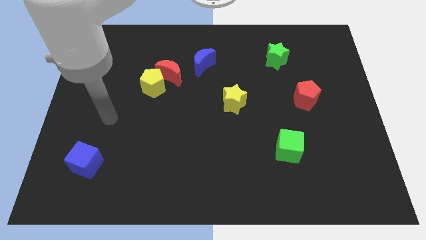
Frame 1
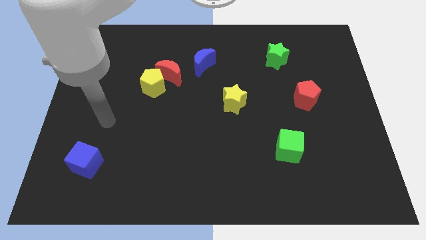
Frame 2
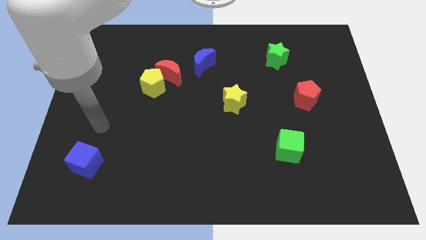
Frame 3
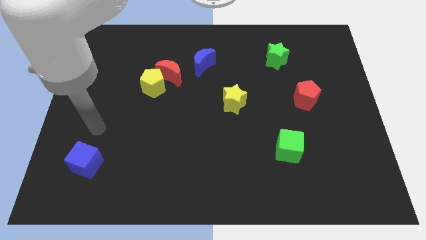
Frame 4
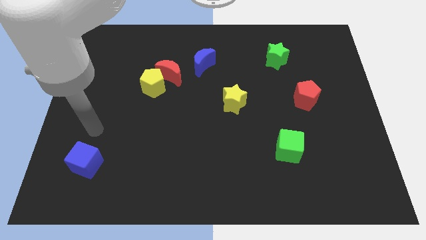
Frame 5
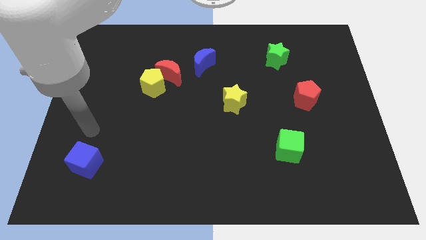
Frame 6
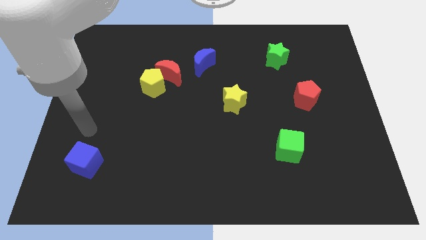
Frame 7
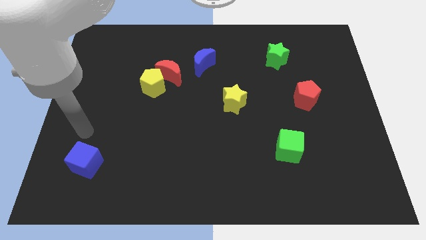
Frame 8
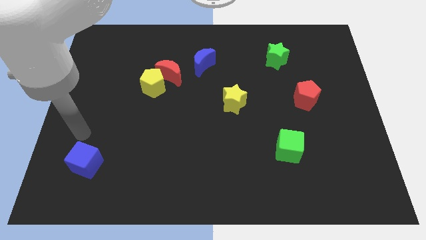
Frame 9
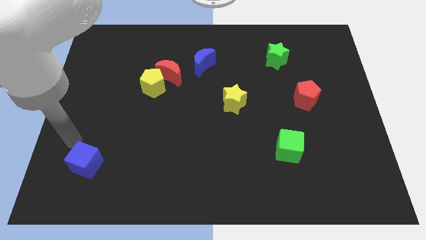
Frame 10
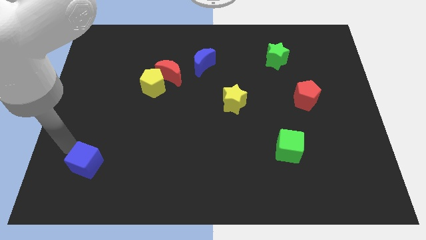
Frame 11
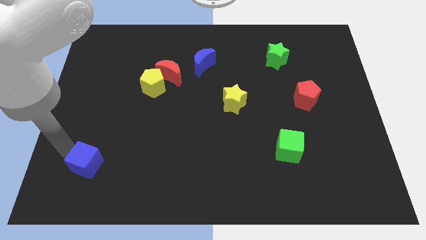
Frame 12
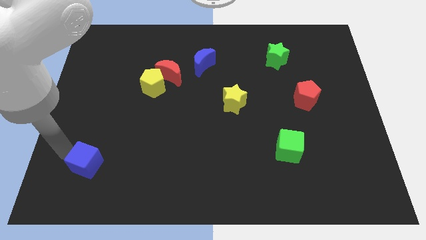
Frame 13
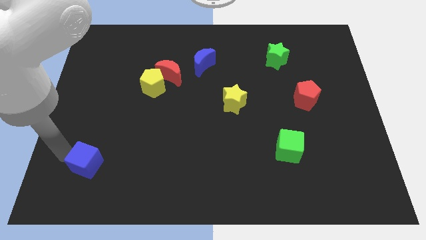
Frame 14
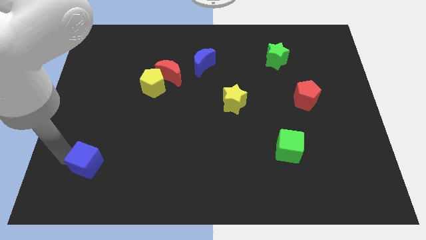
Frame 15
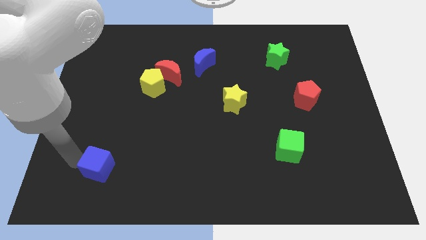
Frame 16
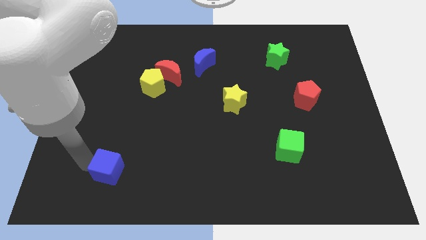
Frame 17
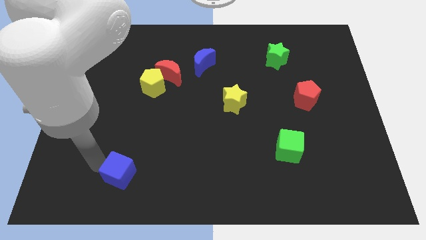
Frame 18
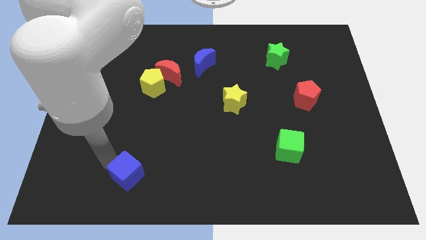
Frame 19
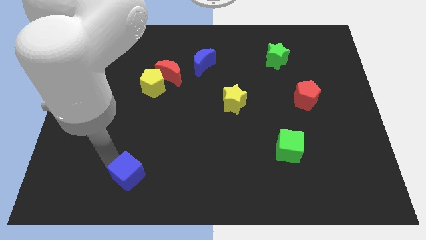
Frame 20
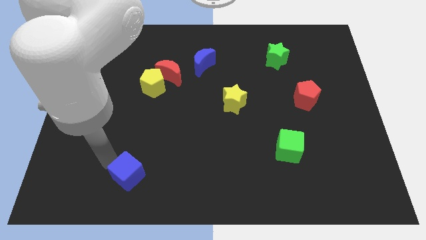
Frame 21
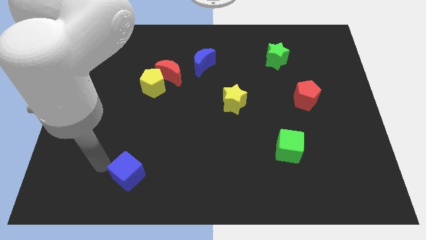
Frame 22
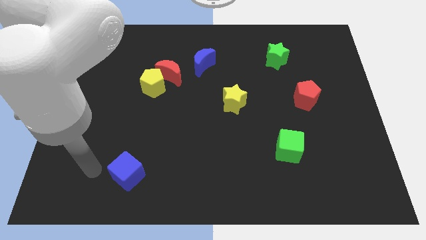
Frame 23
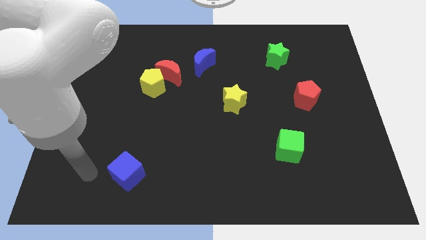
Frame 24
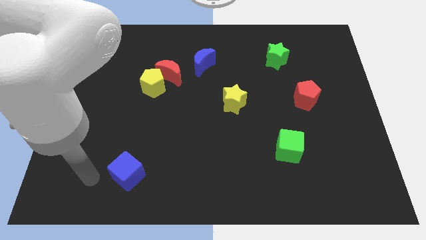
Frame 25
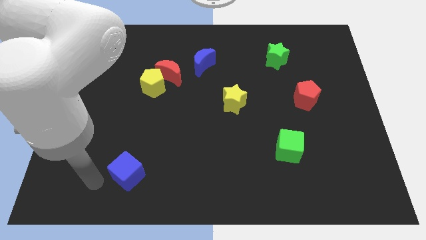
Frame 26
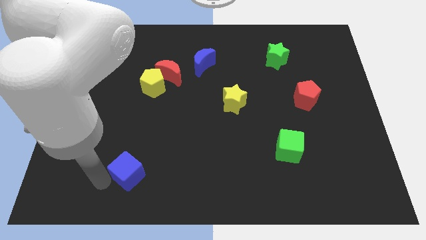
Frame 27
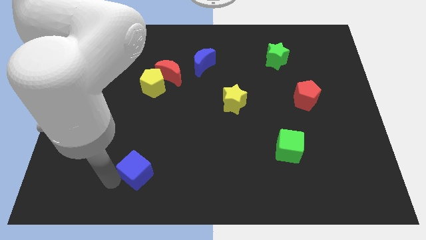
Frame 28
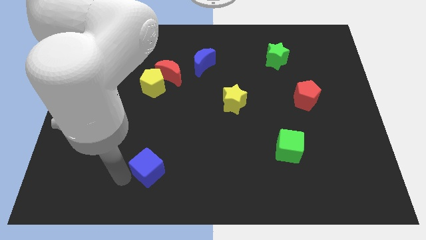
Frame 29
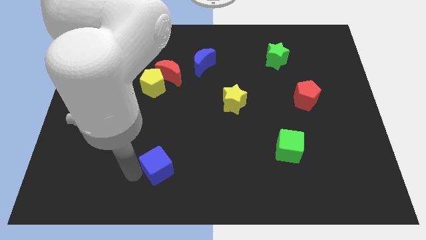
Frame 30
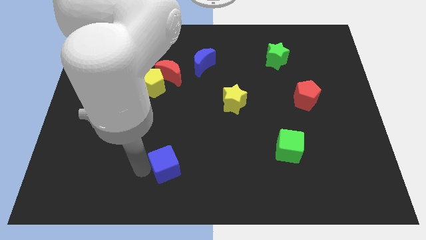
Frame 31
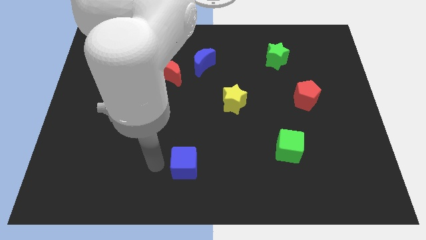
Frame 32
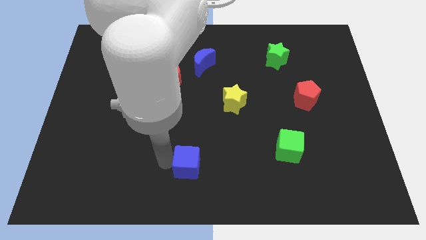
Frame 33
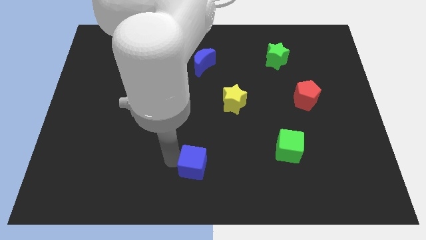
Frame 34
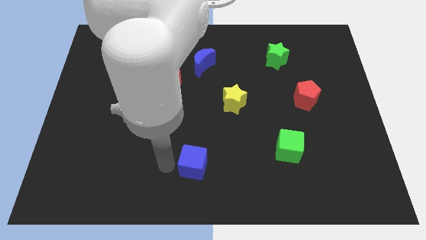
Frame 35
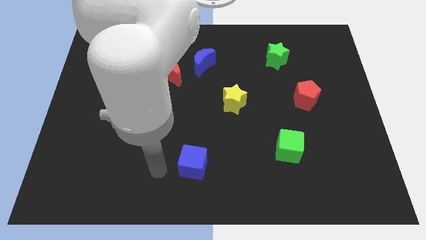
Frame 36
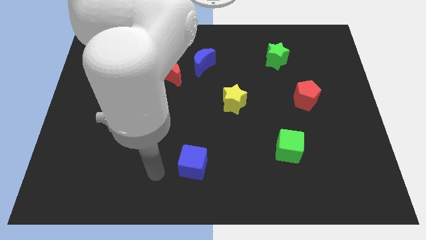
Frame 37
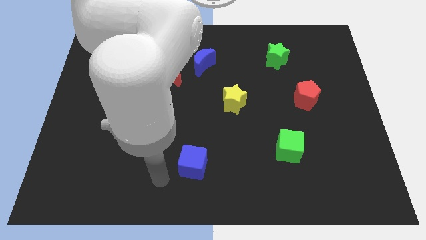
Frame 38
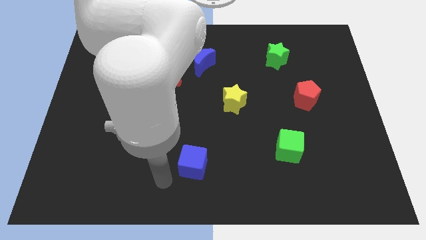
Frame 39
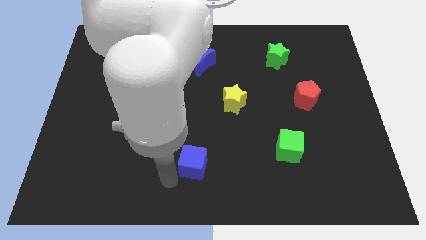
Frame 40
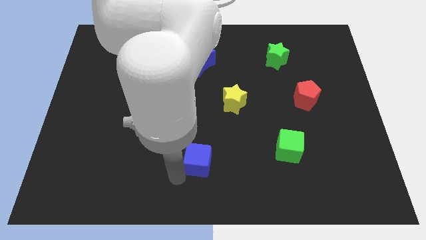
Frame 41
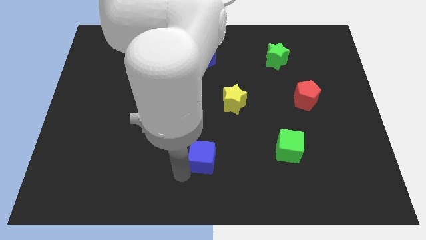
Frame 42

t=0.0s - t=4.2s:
place the blue cube below the blue moon

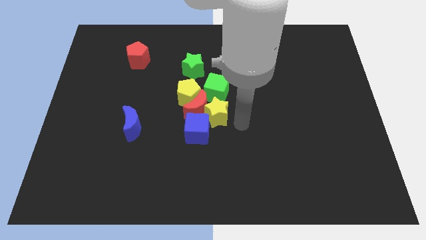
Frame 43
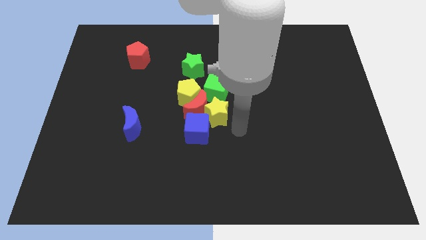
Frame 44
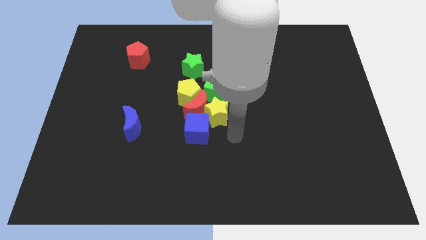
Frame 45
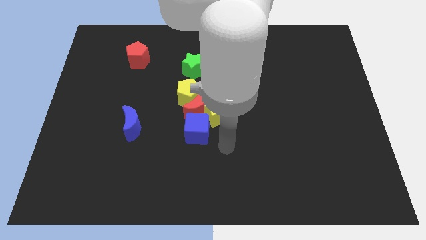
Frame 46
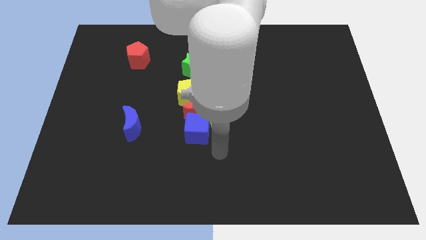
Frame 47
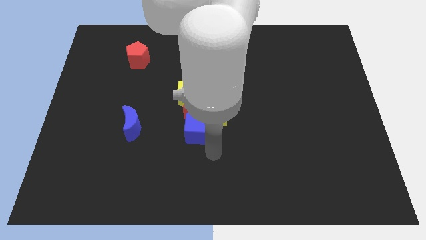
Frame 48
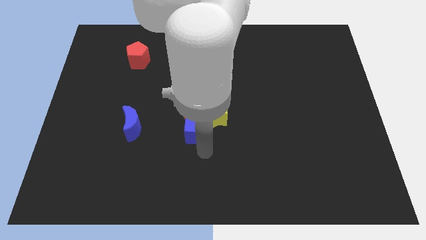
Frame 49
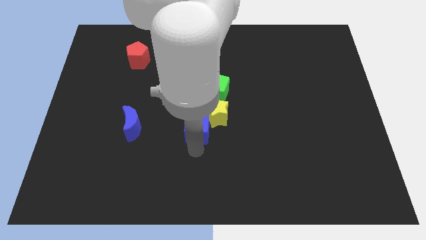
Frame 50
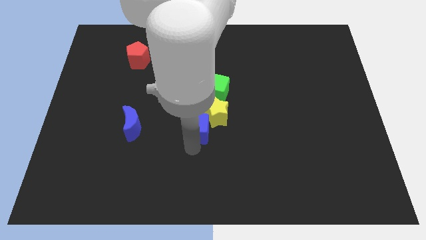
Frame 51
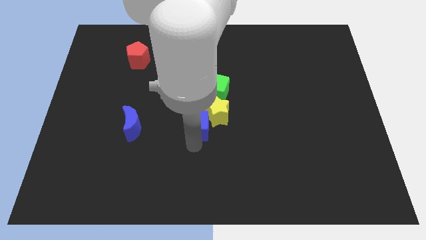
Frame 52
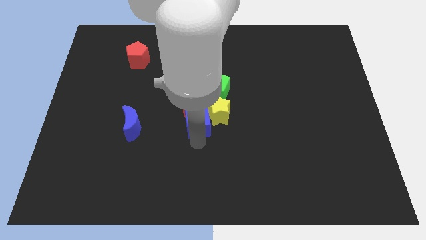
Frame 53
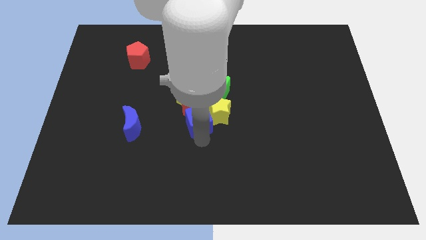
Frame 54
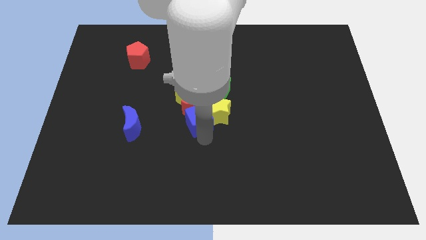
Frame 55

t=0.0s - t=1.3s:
move the group of blocks upward

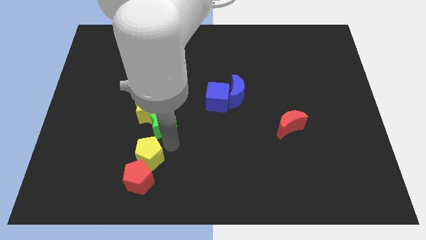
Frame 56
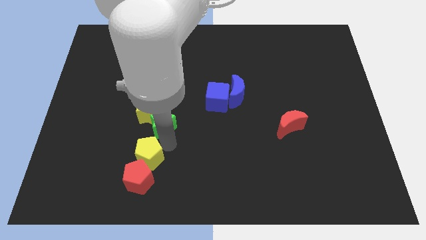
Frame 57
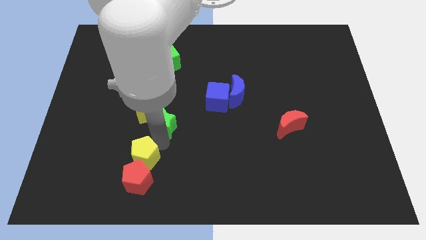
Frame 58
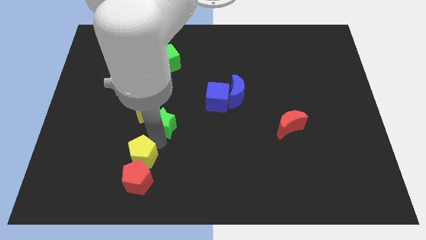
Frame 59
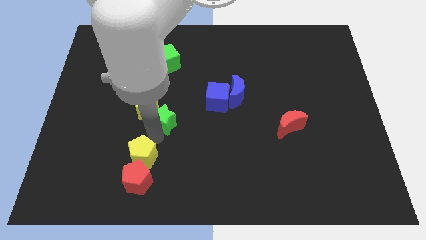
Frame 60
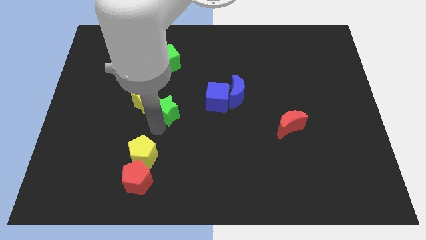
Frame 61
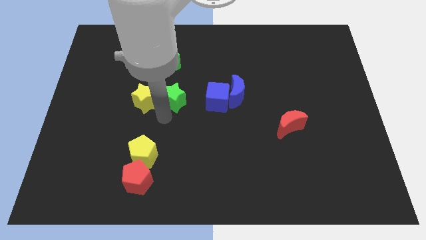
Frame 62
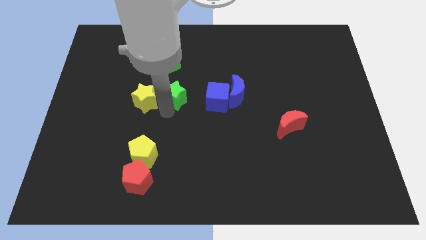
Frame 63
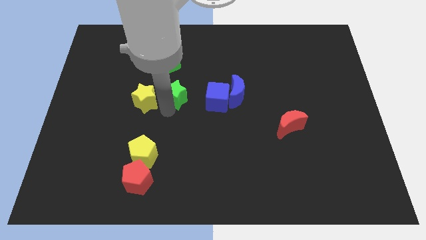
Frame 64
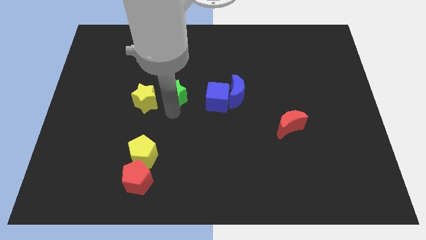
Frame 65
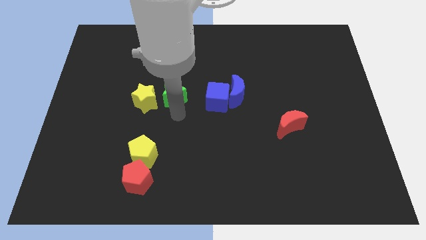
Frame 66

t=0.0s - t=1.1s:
push the green star to the right of the yellow star

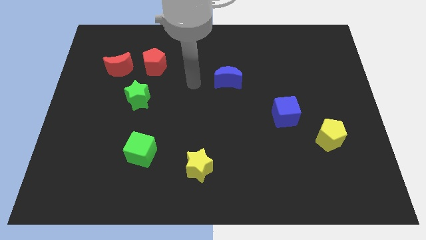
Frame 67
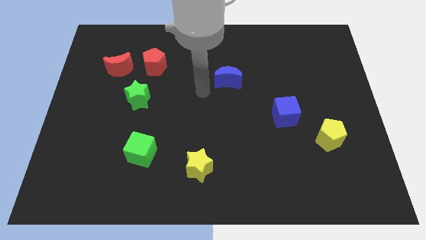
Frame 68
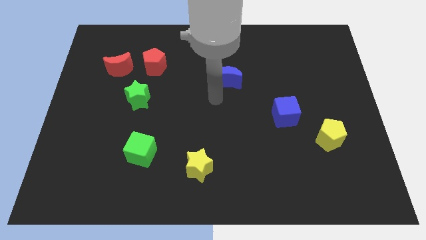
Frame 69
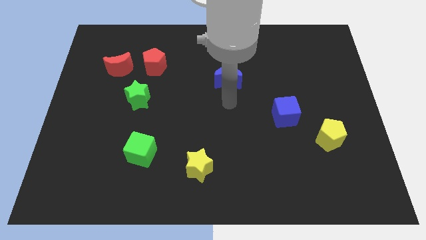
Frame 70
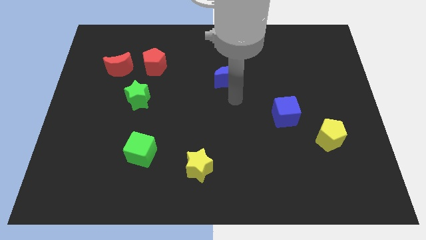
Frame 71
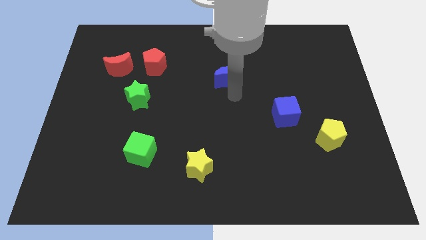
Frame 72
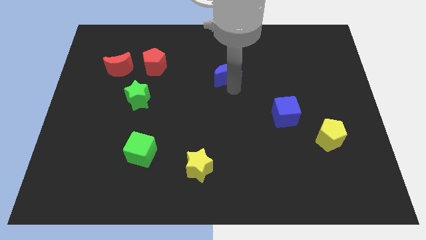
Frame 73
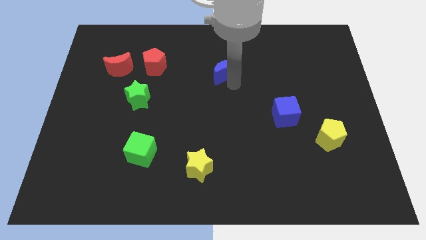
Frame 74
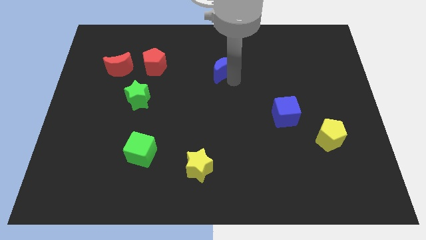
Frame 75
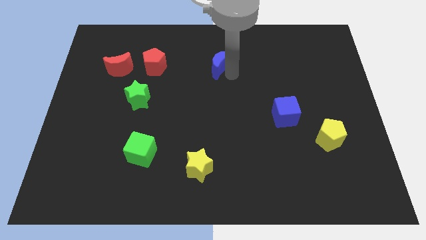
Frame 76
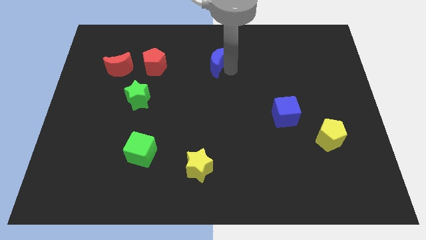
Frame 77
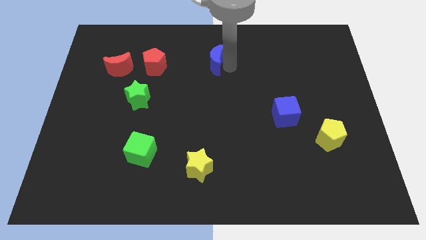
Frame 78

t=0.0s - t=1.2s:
move the blue cube up slightly

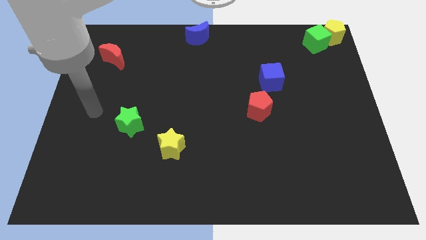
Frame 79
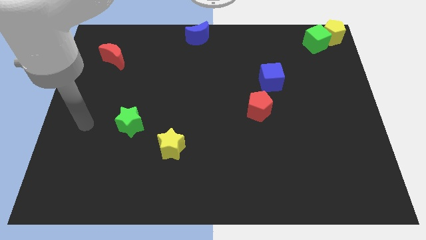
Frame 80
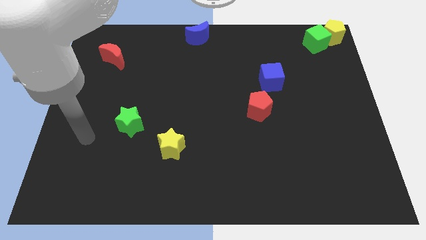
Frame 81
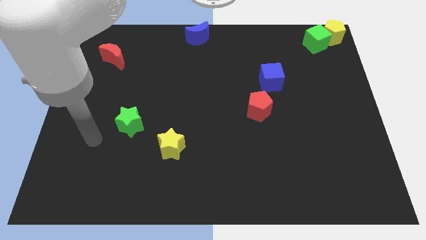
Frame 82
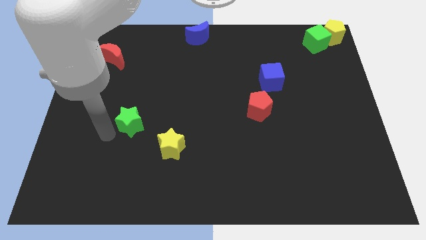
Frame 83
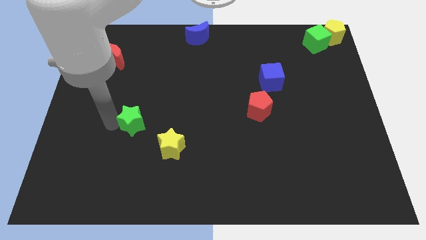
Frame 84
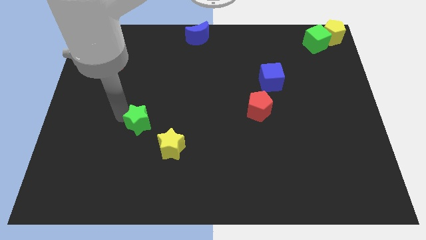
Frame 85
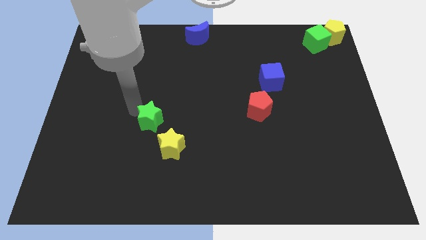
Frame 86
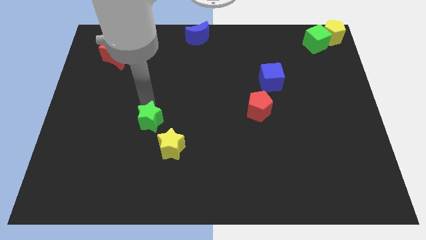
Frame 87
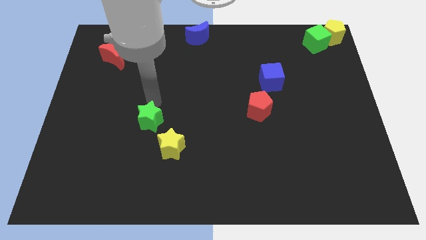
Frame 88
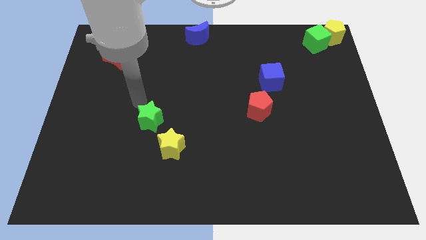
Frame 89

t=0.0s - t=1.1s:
place the green star diagonally to the yellow star

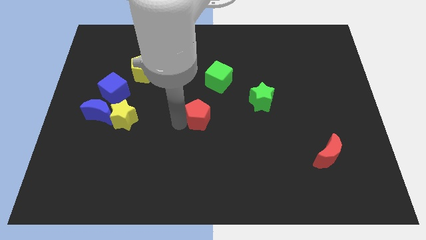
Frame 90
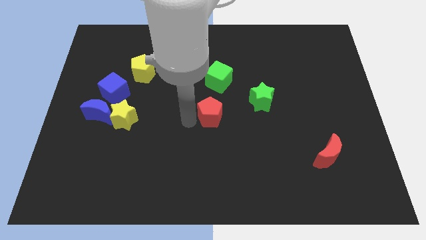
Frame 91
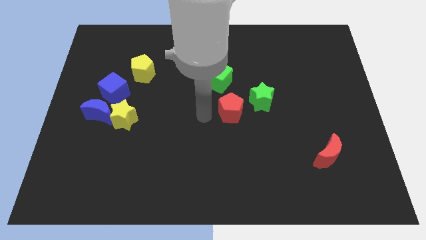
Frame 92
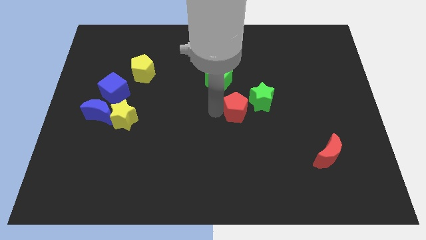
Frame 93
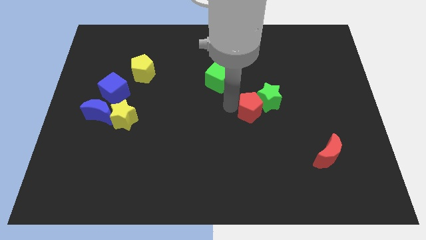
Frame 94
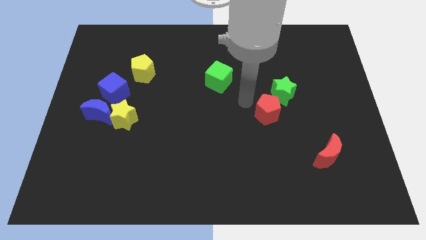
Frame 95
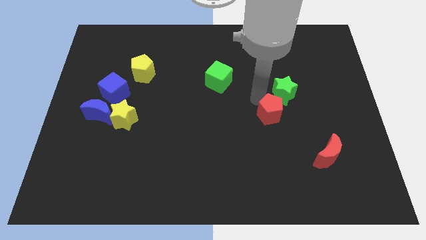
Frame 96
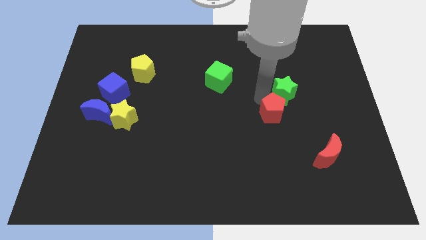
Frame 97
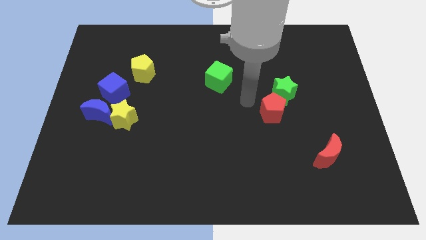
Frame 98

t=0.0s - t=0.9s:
push red pentagon into the green star
